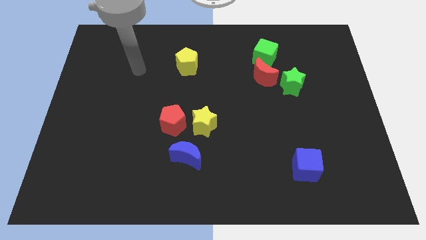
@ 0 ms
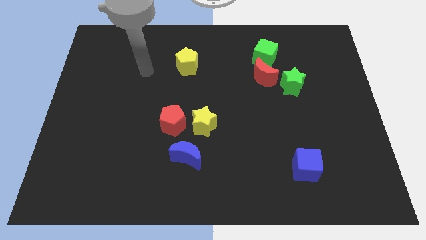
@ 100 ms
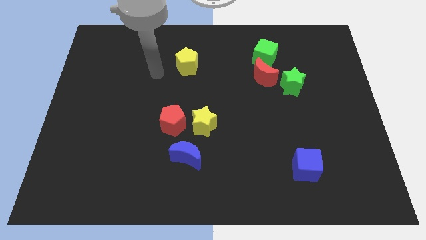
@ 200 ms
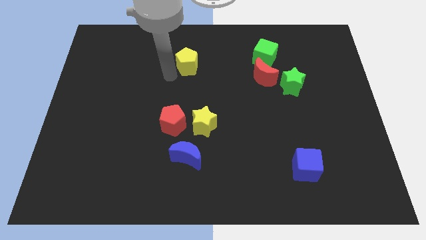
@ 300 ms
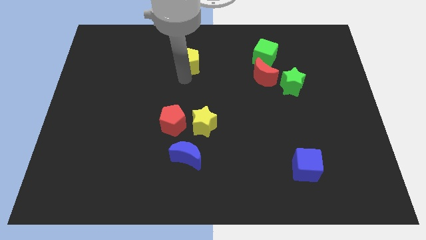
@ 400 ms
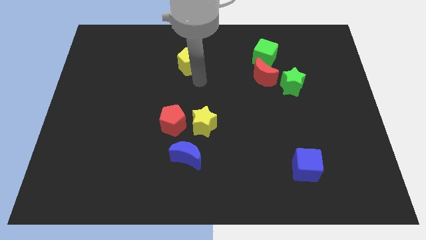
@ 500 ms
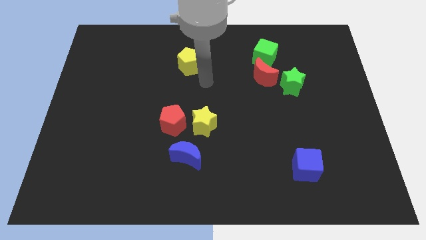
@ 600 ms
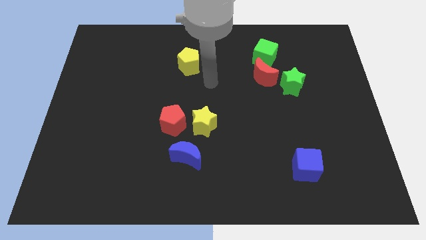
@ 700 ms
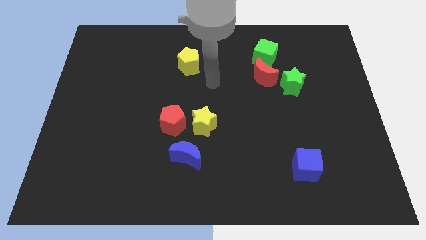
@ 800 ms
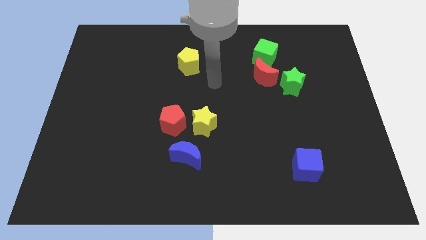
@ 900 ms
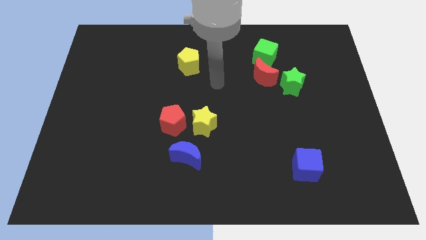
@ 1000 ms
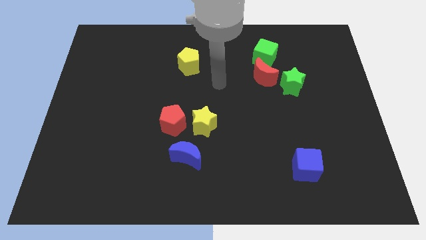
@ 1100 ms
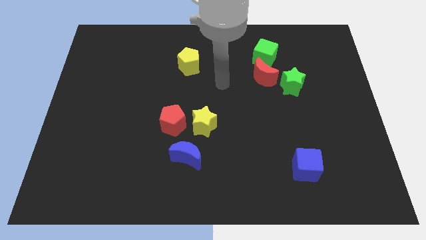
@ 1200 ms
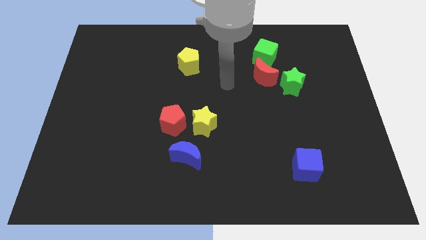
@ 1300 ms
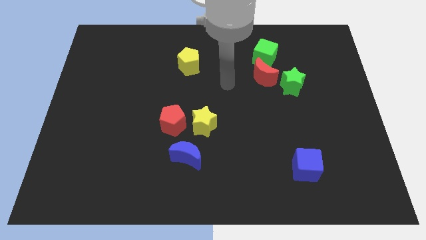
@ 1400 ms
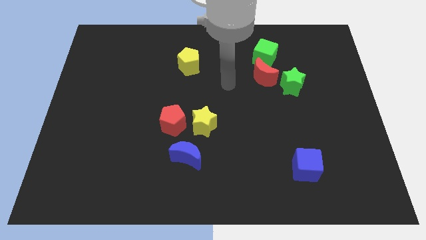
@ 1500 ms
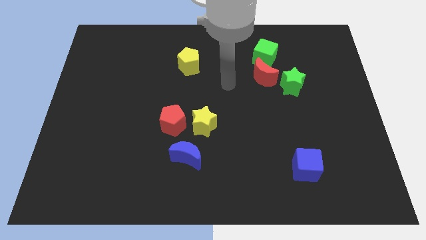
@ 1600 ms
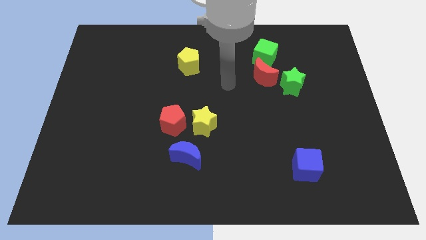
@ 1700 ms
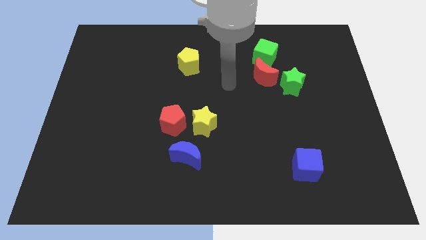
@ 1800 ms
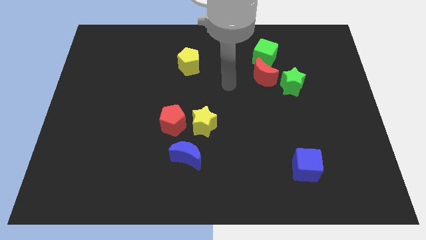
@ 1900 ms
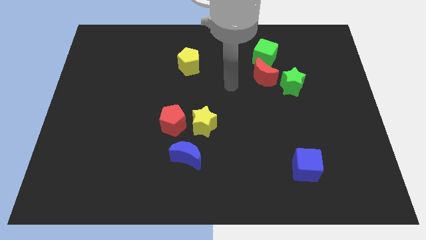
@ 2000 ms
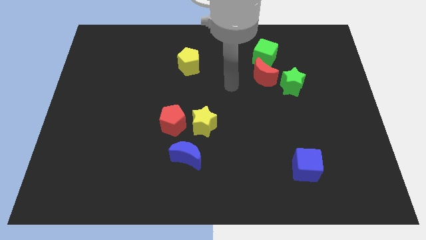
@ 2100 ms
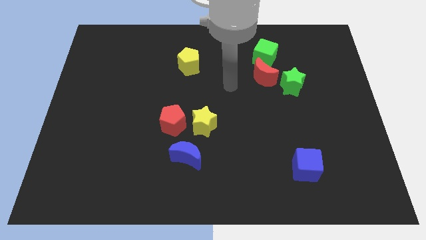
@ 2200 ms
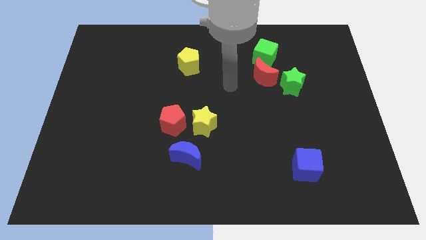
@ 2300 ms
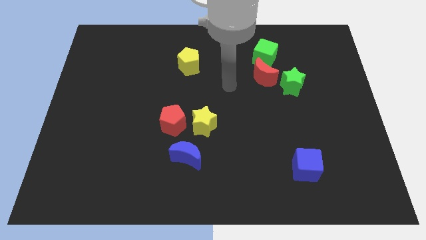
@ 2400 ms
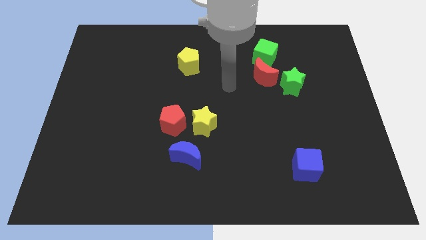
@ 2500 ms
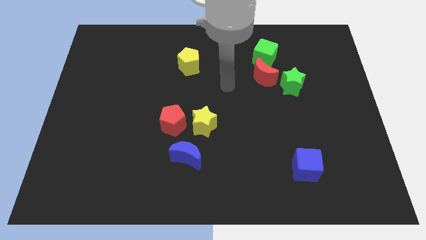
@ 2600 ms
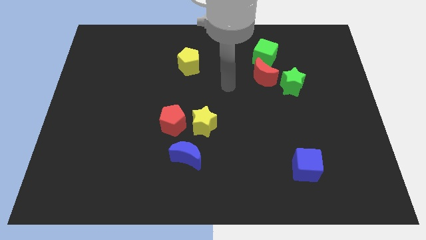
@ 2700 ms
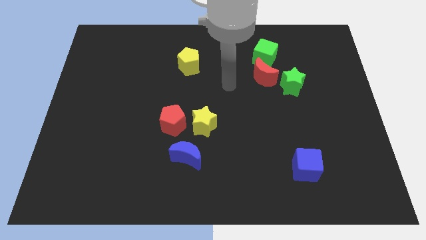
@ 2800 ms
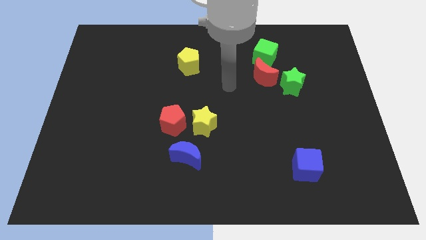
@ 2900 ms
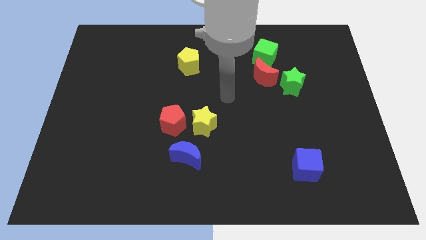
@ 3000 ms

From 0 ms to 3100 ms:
move your arm towards center

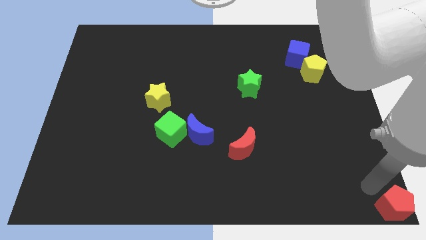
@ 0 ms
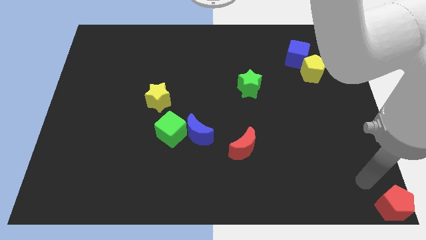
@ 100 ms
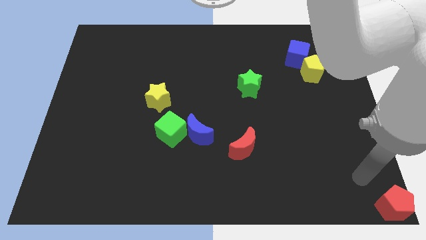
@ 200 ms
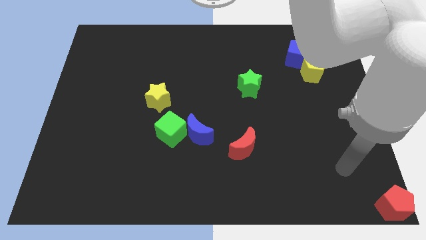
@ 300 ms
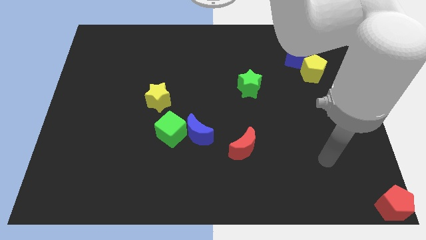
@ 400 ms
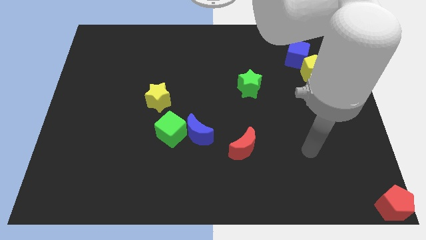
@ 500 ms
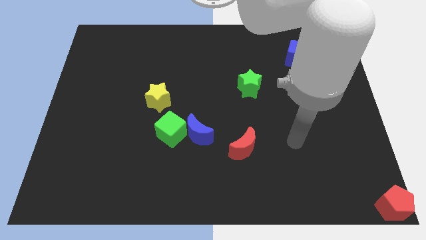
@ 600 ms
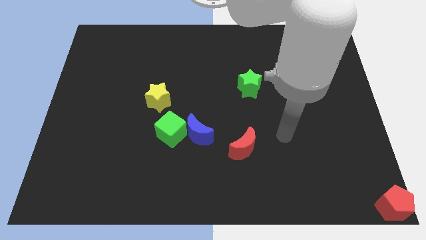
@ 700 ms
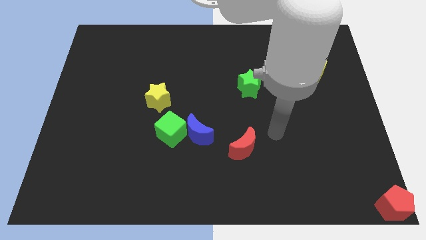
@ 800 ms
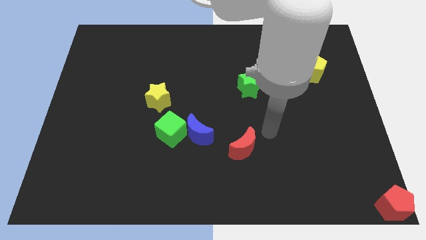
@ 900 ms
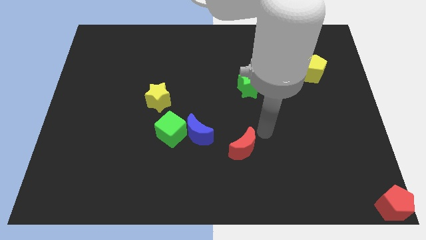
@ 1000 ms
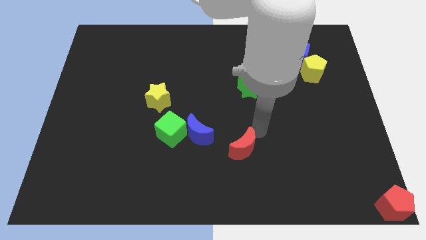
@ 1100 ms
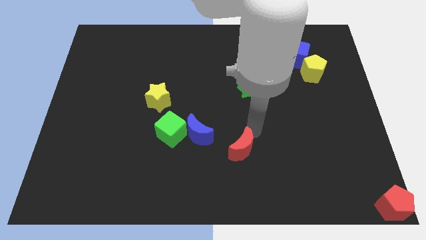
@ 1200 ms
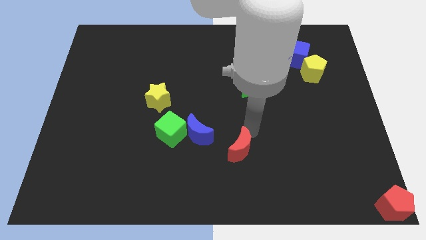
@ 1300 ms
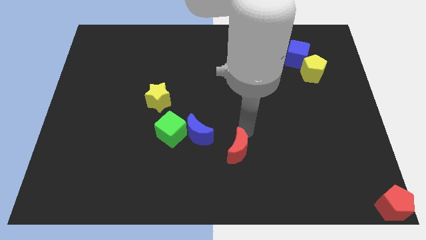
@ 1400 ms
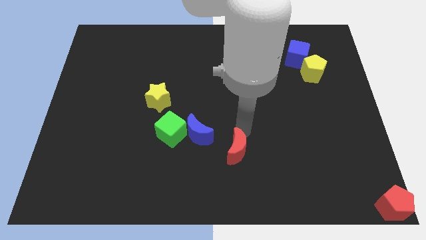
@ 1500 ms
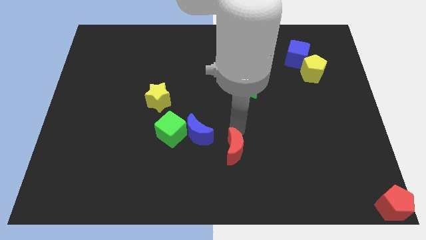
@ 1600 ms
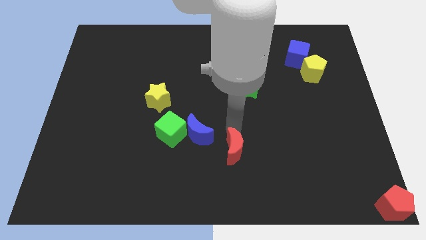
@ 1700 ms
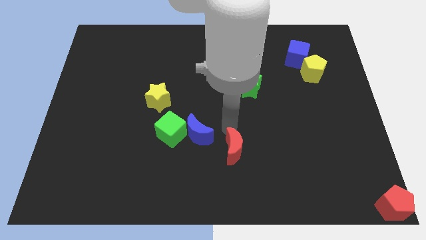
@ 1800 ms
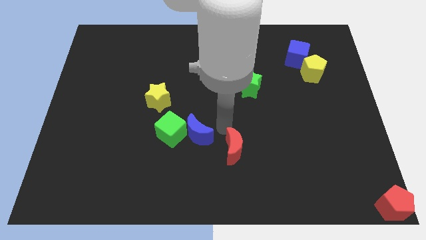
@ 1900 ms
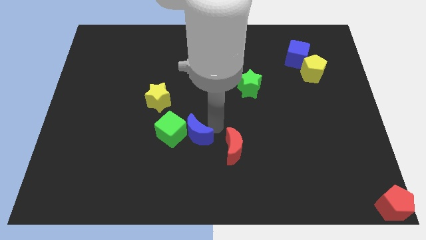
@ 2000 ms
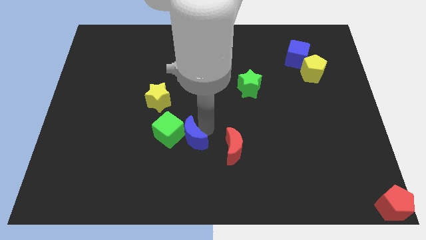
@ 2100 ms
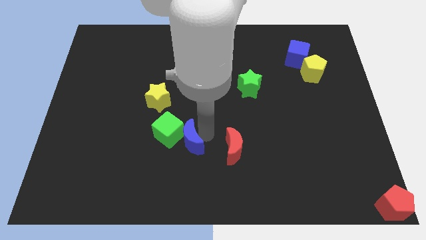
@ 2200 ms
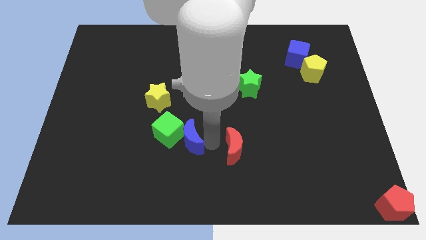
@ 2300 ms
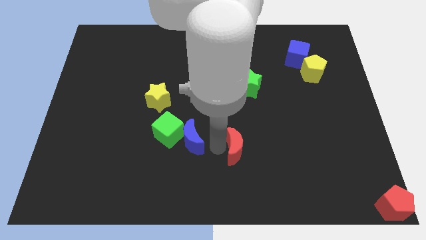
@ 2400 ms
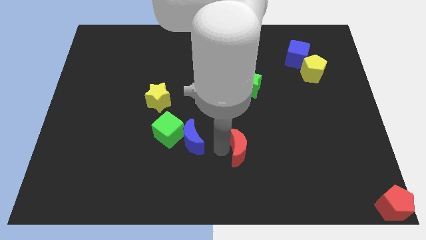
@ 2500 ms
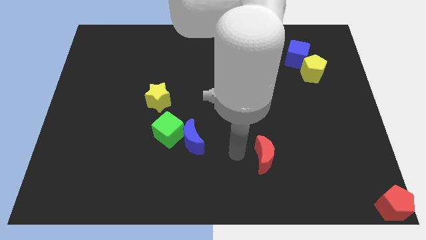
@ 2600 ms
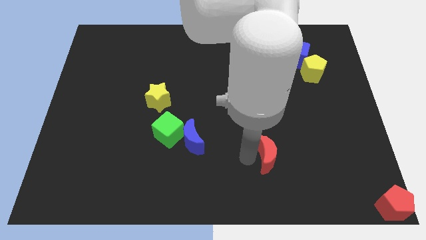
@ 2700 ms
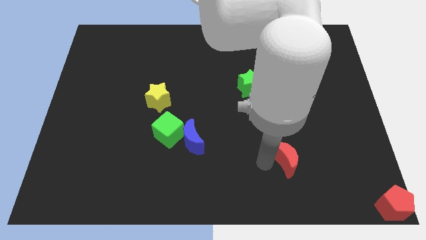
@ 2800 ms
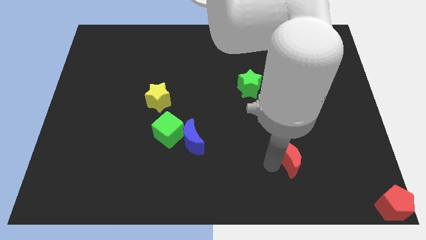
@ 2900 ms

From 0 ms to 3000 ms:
separate the red crescent from blue crescent

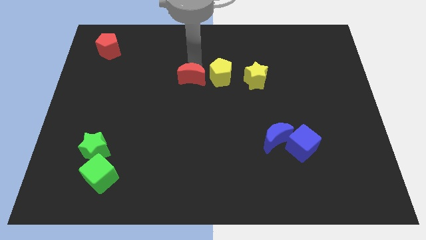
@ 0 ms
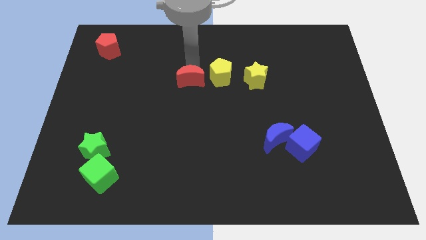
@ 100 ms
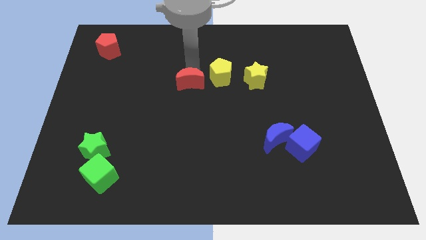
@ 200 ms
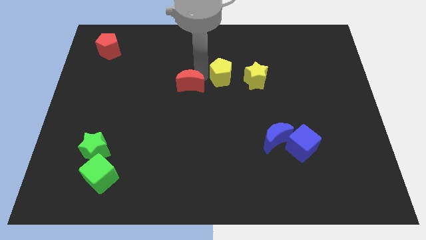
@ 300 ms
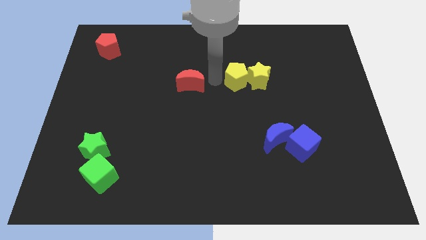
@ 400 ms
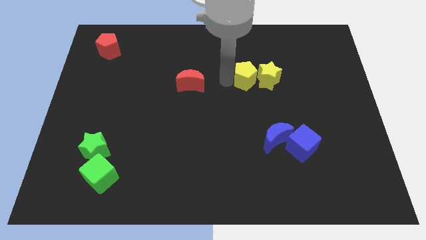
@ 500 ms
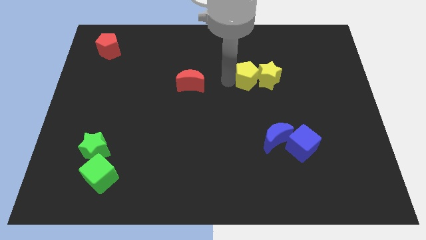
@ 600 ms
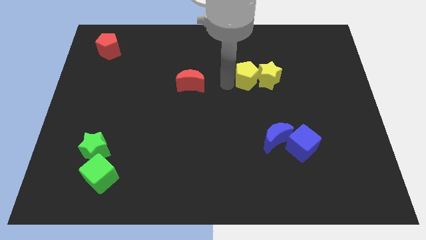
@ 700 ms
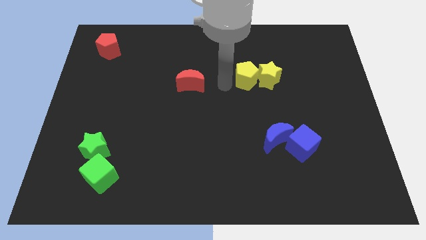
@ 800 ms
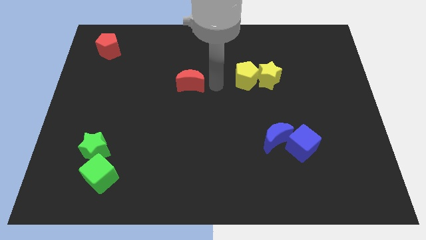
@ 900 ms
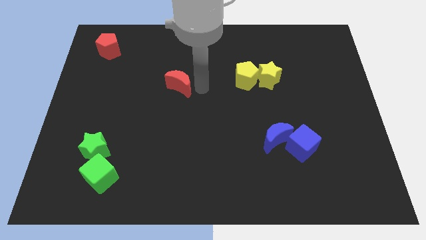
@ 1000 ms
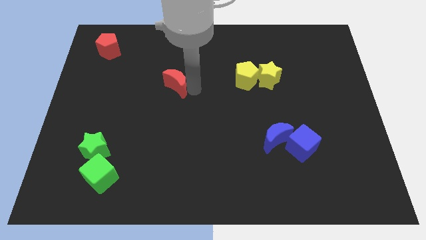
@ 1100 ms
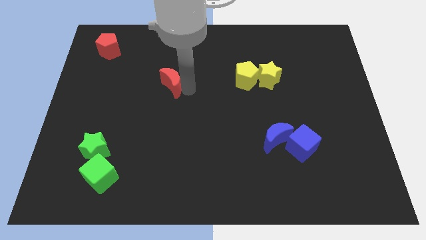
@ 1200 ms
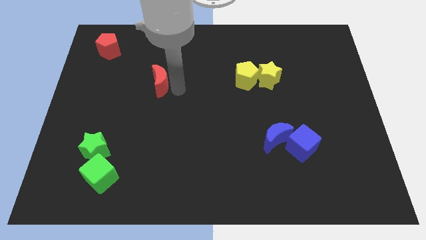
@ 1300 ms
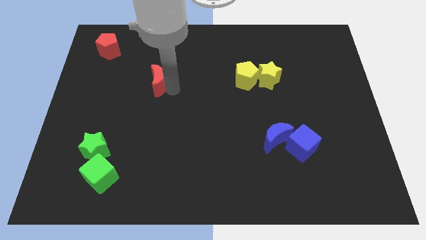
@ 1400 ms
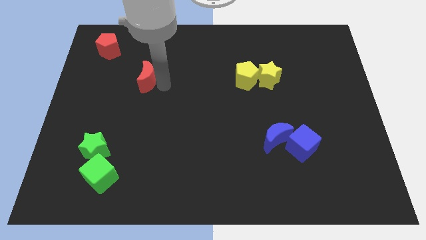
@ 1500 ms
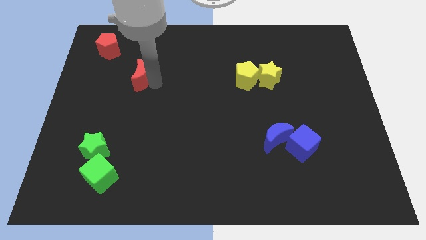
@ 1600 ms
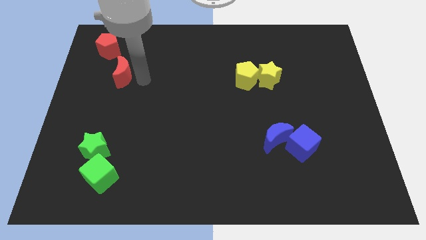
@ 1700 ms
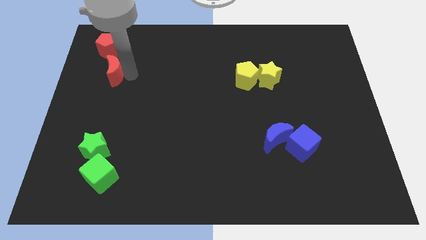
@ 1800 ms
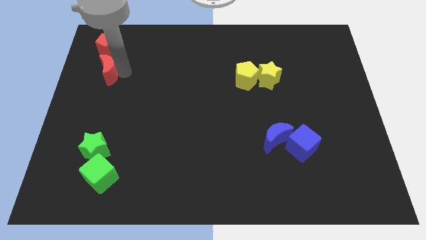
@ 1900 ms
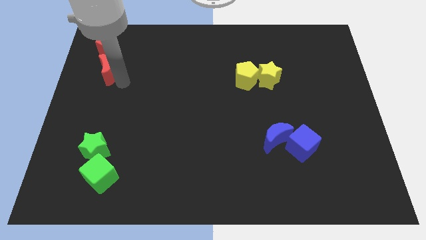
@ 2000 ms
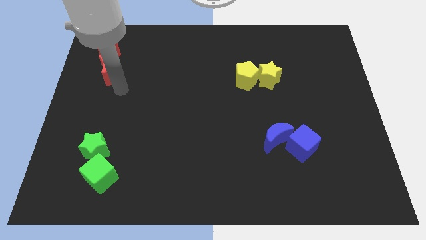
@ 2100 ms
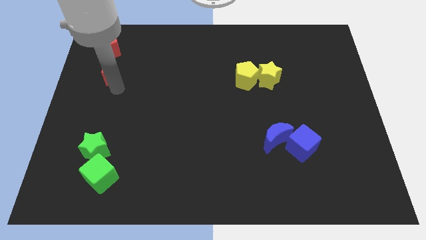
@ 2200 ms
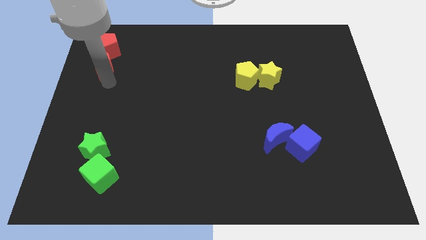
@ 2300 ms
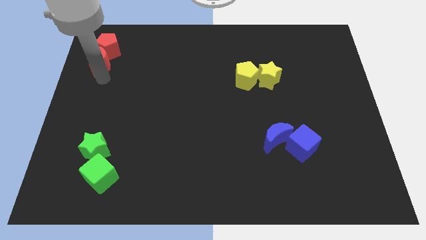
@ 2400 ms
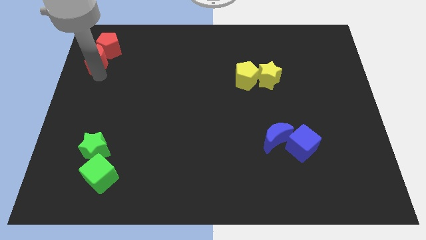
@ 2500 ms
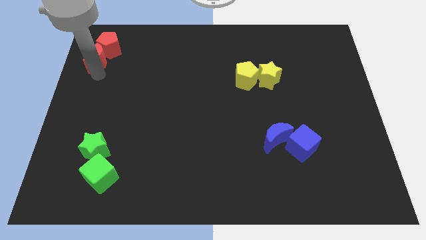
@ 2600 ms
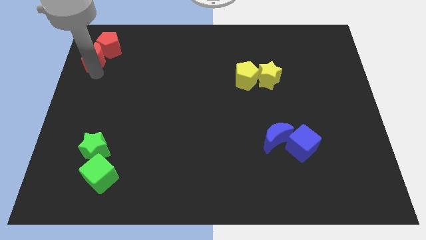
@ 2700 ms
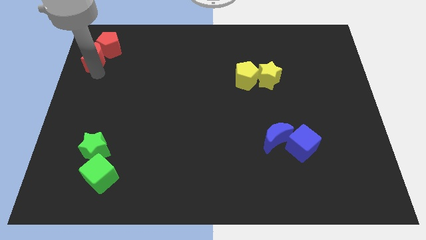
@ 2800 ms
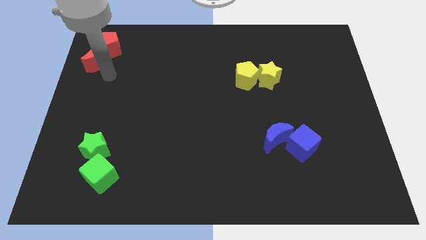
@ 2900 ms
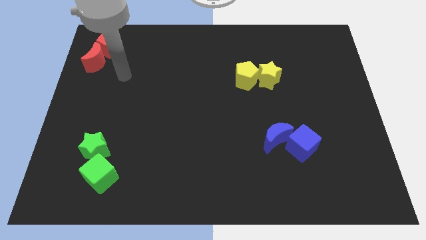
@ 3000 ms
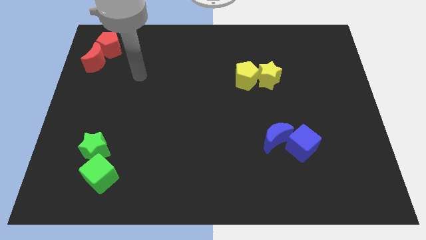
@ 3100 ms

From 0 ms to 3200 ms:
push the red blocks and the yellow blocks diagonal to each other
